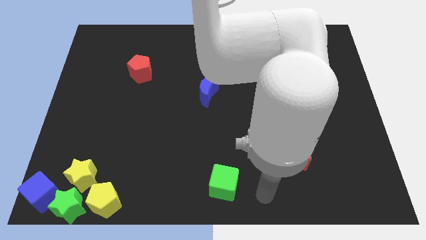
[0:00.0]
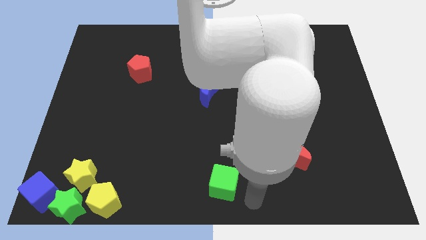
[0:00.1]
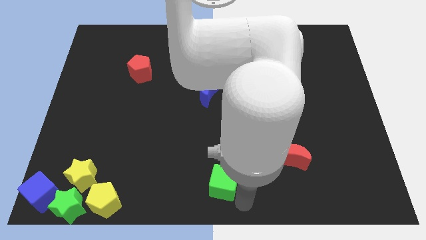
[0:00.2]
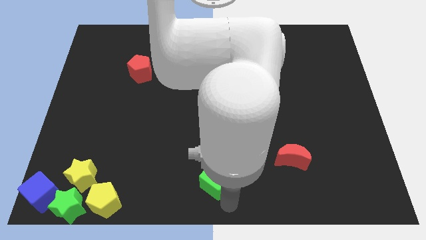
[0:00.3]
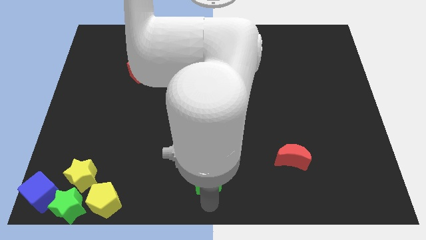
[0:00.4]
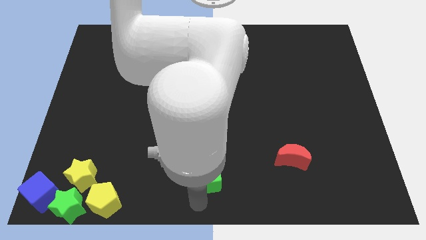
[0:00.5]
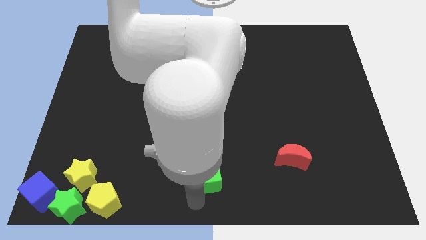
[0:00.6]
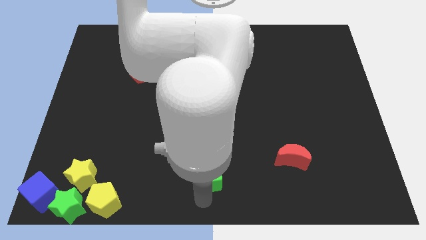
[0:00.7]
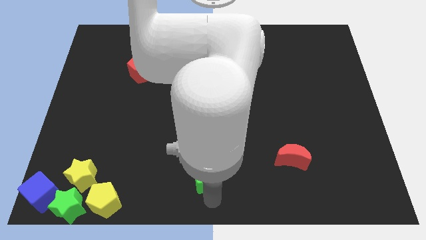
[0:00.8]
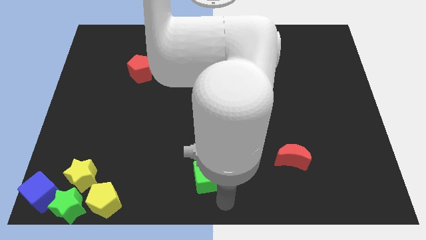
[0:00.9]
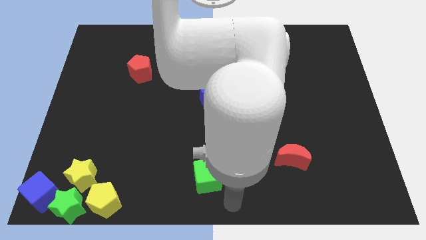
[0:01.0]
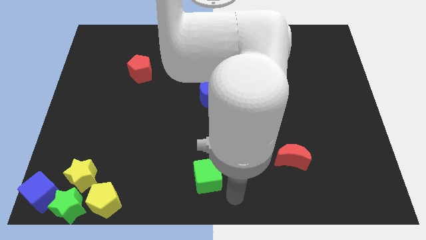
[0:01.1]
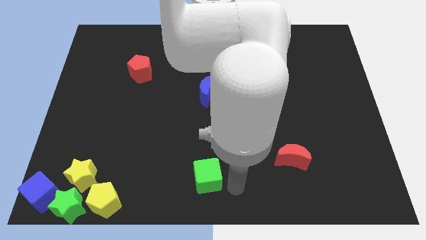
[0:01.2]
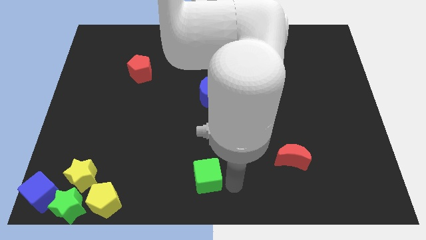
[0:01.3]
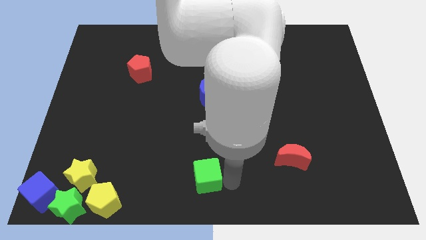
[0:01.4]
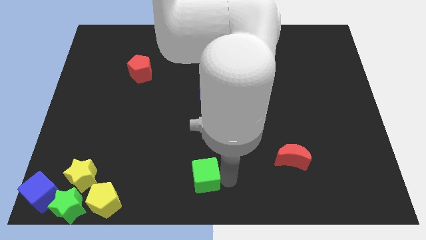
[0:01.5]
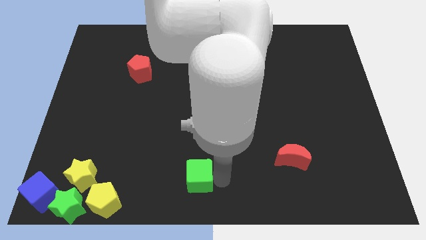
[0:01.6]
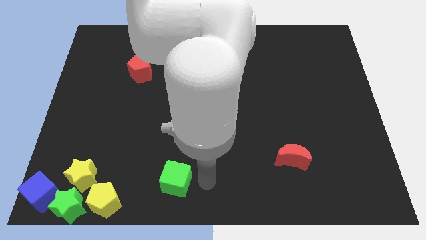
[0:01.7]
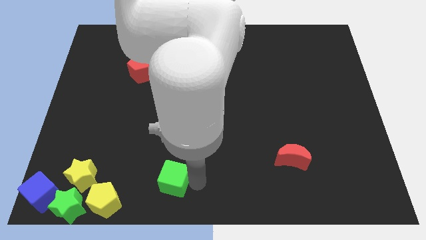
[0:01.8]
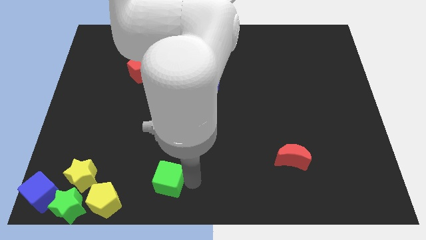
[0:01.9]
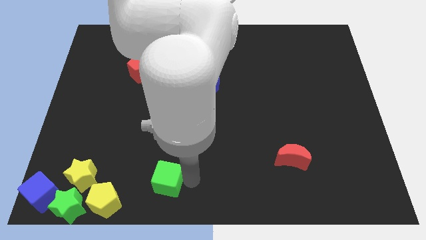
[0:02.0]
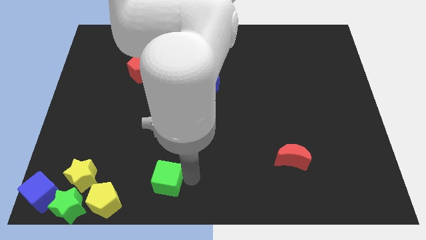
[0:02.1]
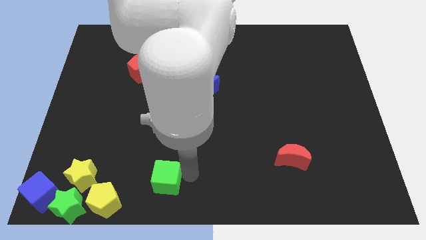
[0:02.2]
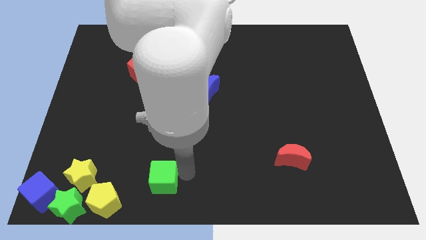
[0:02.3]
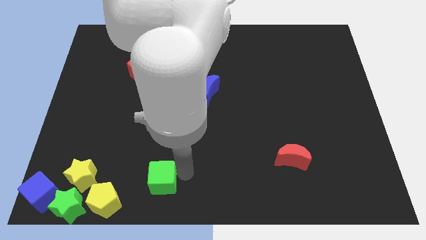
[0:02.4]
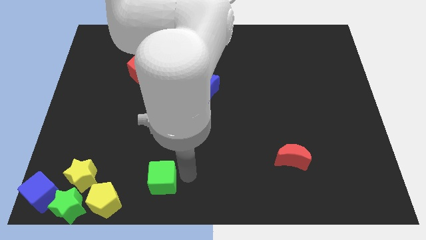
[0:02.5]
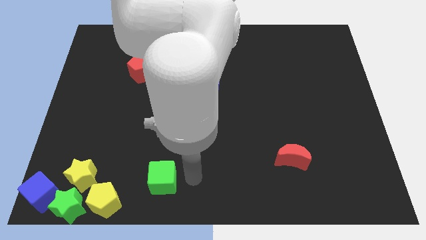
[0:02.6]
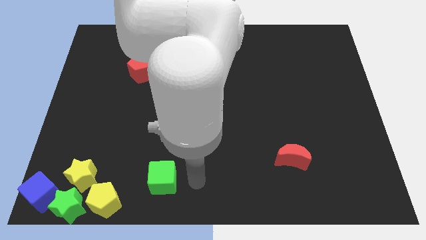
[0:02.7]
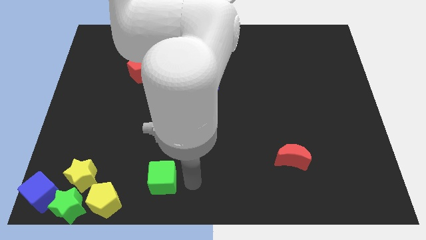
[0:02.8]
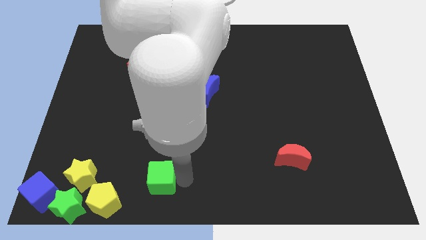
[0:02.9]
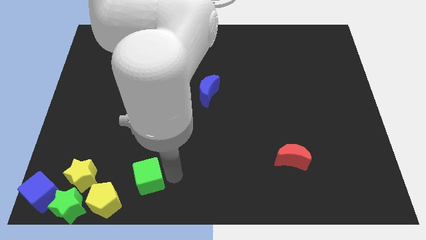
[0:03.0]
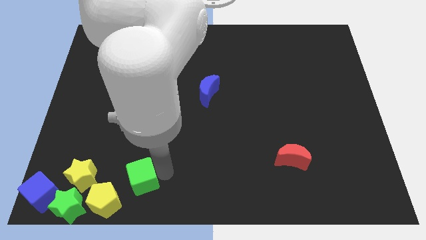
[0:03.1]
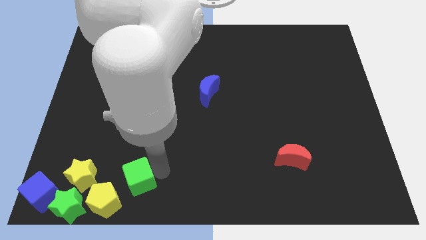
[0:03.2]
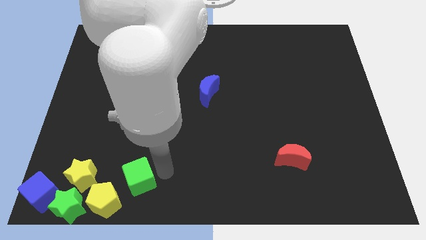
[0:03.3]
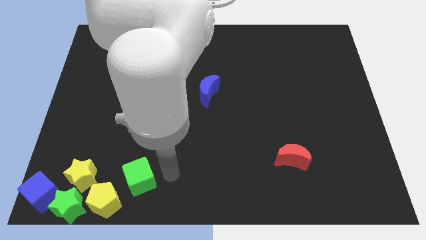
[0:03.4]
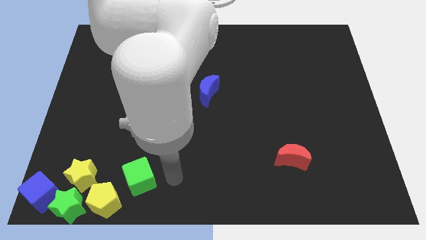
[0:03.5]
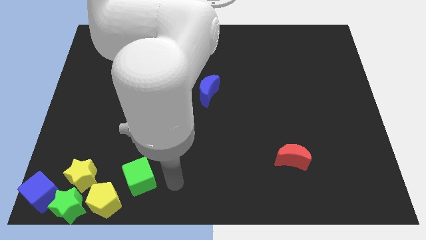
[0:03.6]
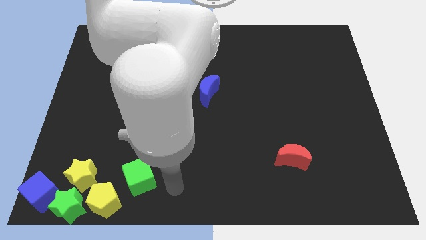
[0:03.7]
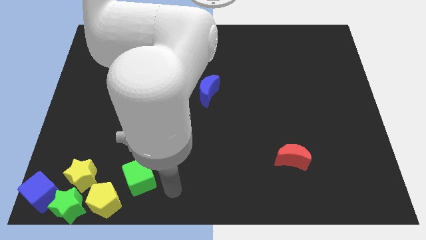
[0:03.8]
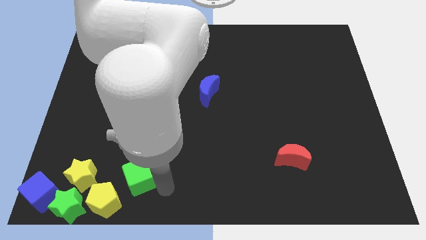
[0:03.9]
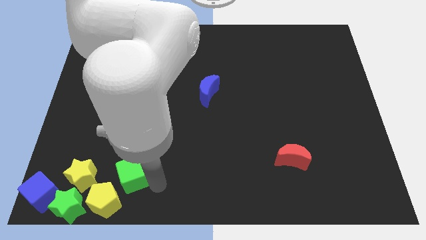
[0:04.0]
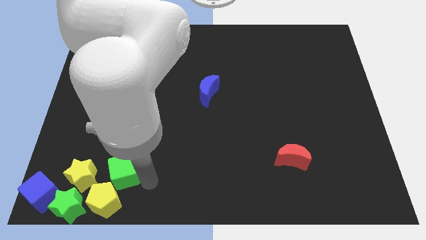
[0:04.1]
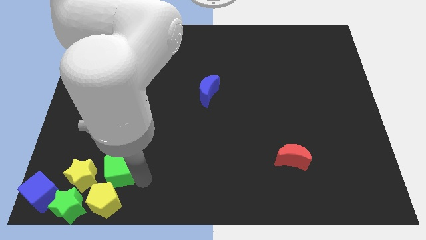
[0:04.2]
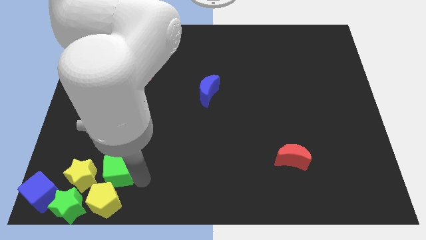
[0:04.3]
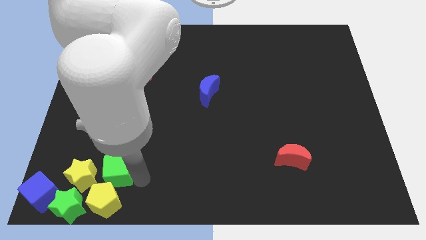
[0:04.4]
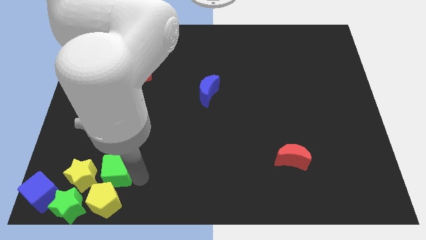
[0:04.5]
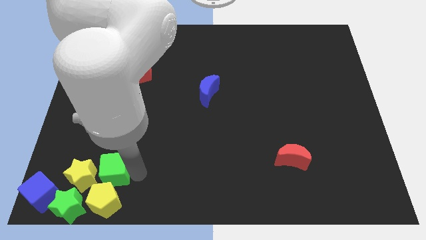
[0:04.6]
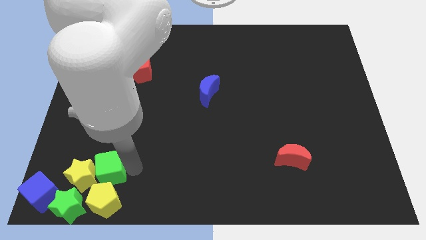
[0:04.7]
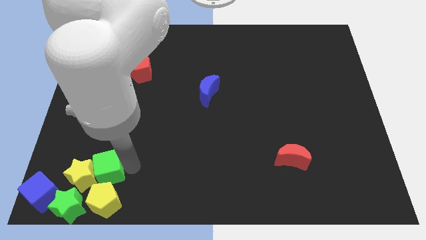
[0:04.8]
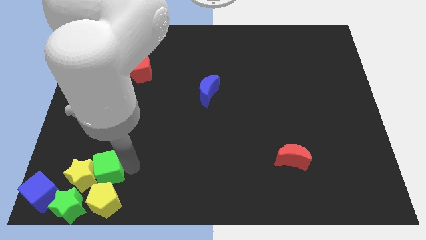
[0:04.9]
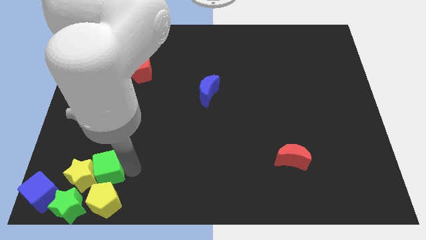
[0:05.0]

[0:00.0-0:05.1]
push the green cube into the yellow star

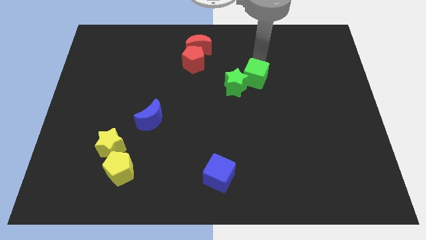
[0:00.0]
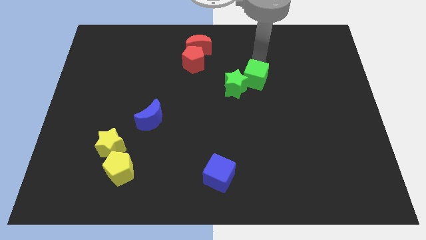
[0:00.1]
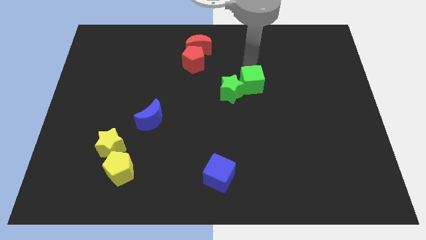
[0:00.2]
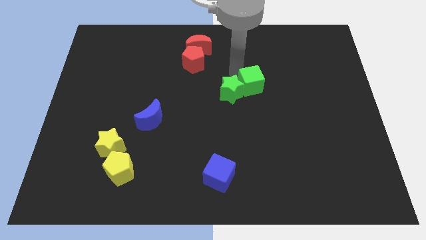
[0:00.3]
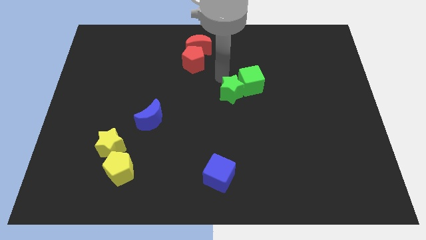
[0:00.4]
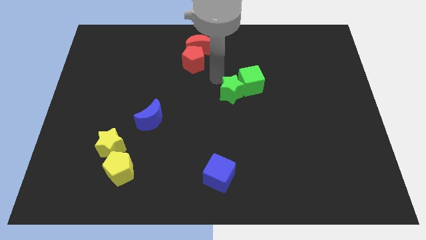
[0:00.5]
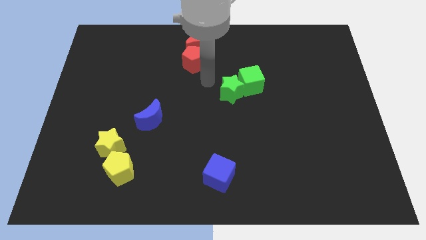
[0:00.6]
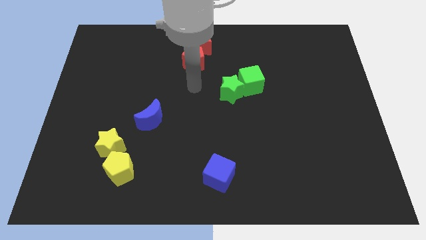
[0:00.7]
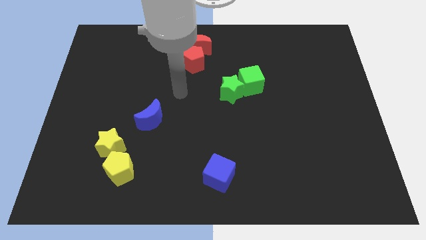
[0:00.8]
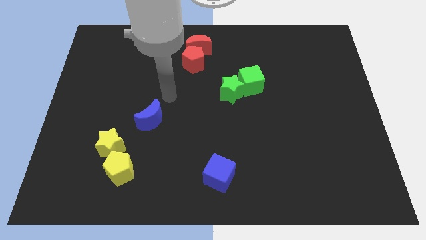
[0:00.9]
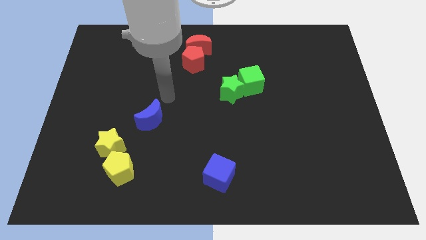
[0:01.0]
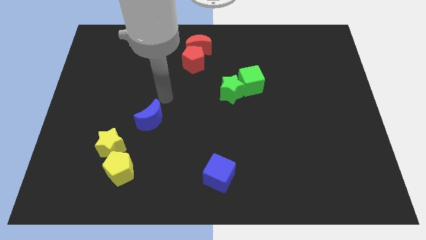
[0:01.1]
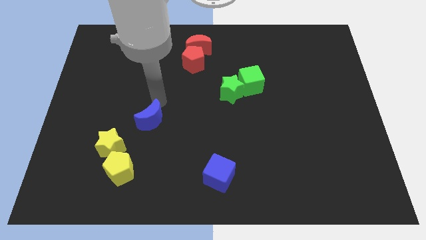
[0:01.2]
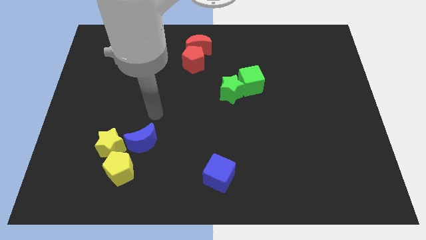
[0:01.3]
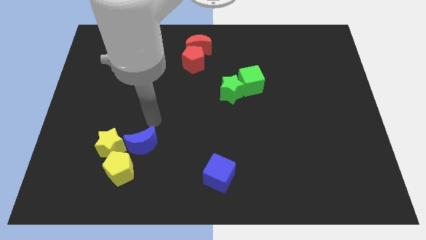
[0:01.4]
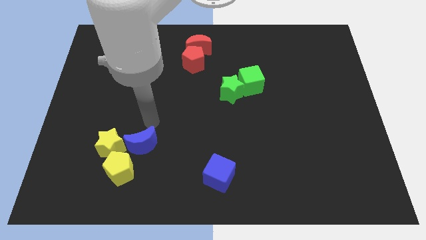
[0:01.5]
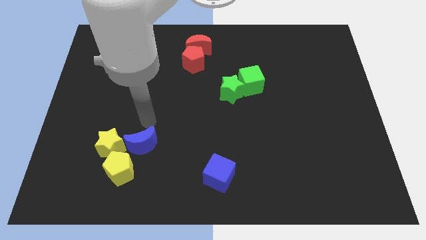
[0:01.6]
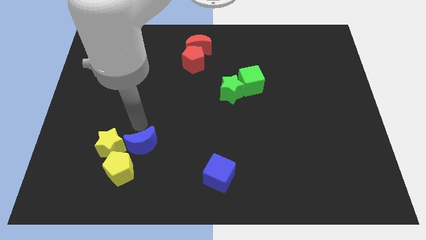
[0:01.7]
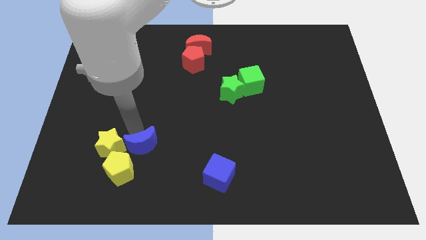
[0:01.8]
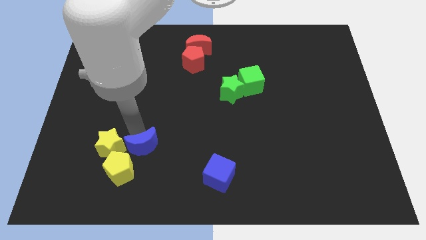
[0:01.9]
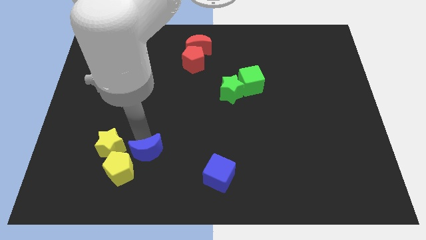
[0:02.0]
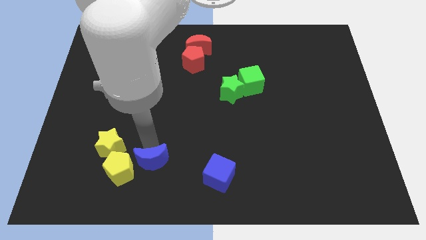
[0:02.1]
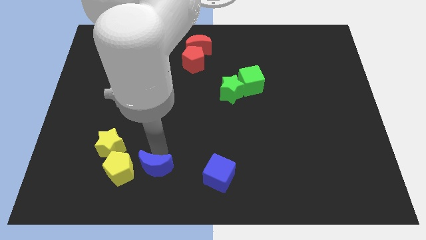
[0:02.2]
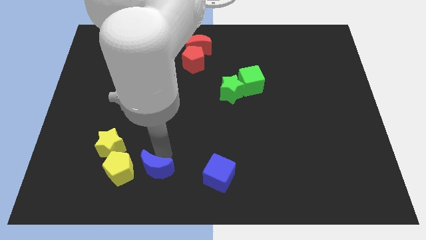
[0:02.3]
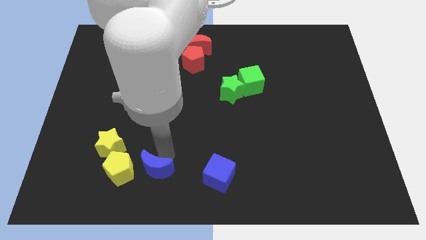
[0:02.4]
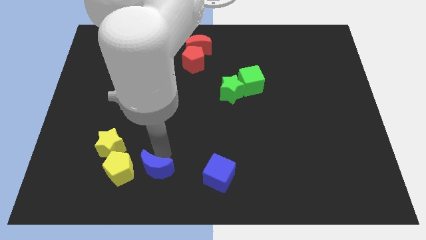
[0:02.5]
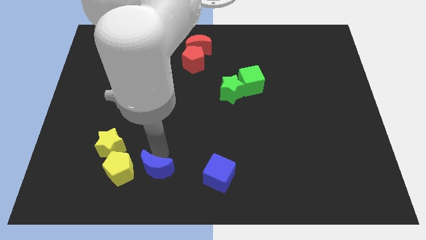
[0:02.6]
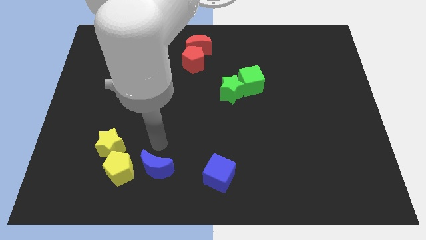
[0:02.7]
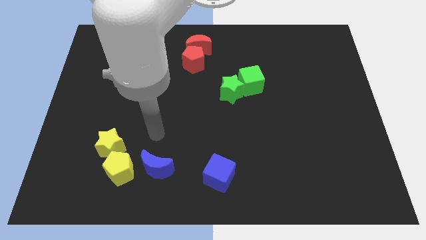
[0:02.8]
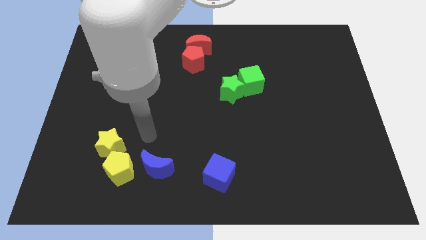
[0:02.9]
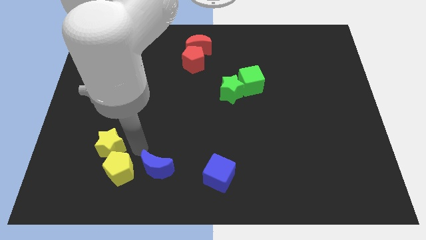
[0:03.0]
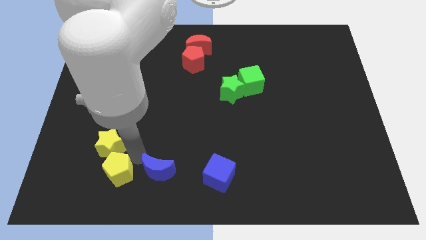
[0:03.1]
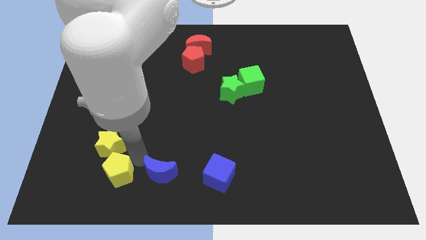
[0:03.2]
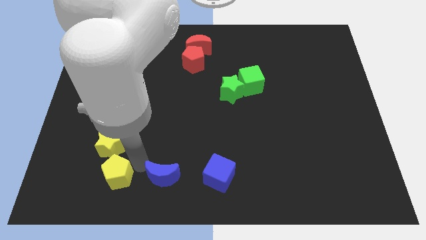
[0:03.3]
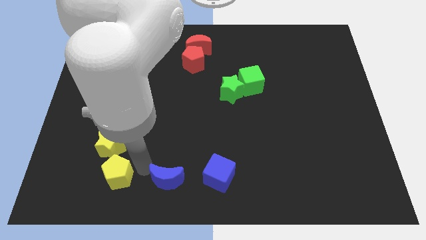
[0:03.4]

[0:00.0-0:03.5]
slide blue moon in between yellow pentagon and blue cube

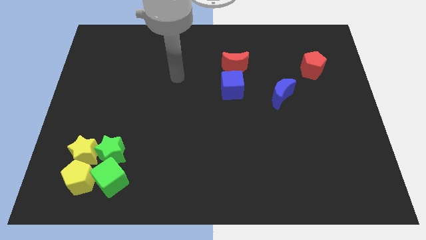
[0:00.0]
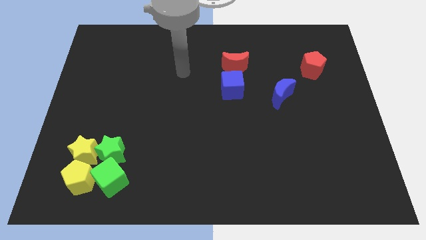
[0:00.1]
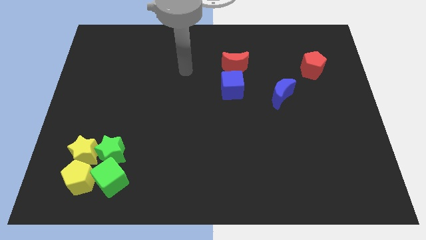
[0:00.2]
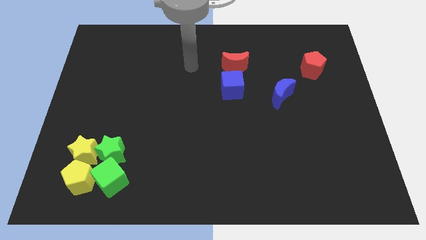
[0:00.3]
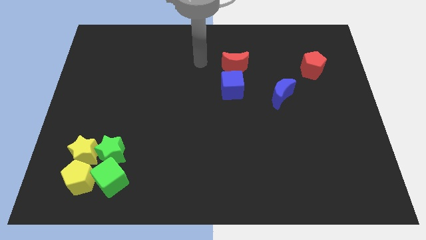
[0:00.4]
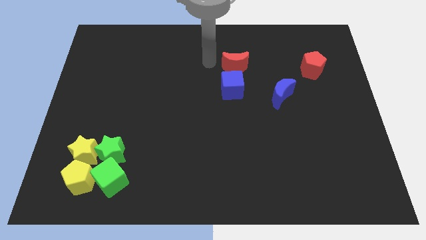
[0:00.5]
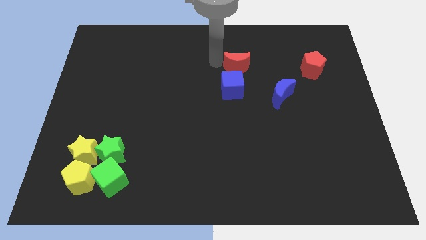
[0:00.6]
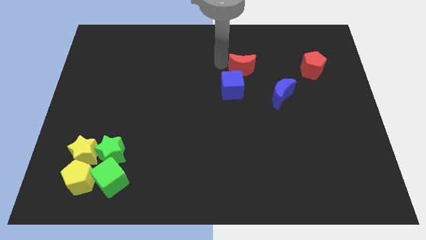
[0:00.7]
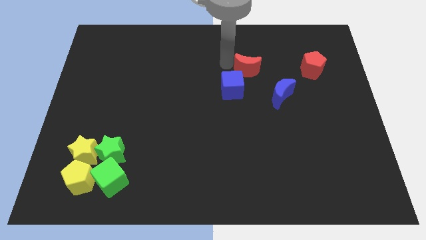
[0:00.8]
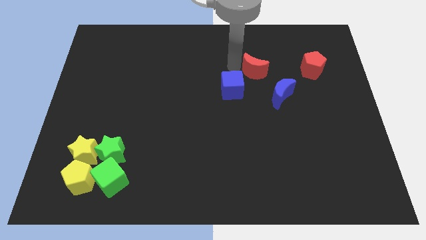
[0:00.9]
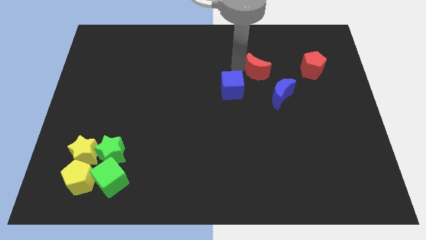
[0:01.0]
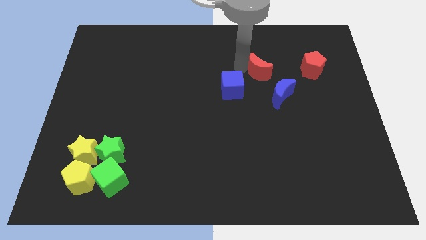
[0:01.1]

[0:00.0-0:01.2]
separate the red moon from the blue cube
